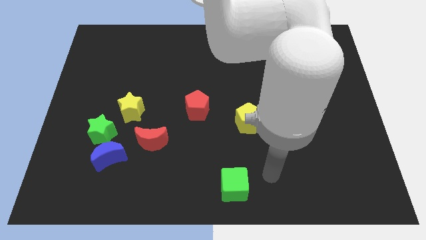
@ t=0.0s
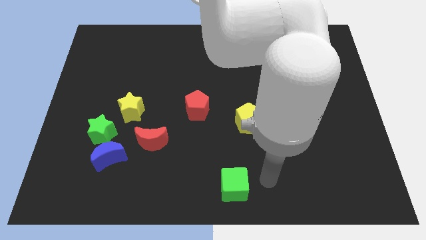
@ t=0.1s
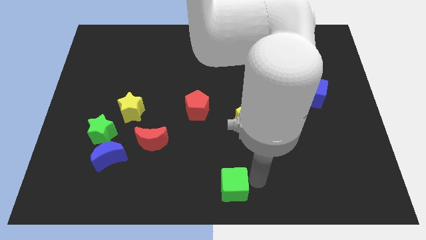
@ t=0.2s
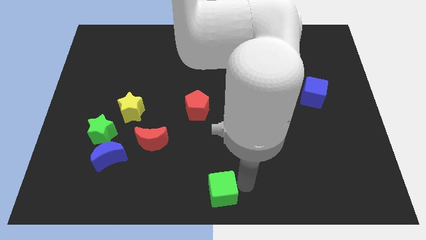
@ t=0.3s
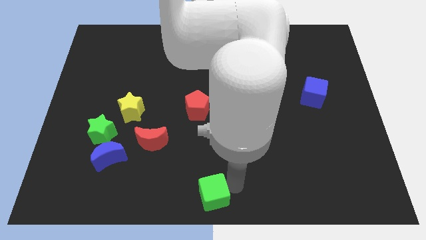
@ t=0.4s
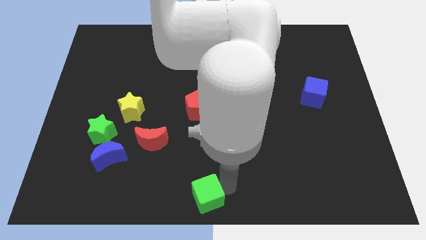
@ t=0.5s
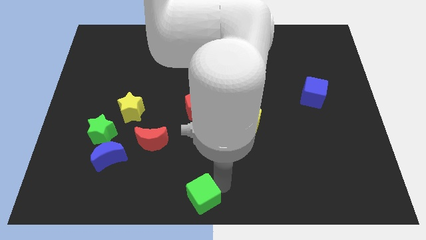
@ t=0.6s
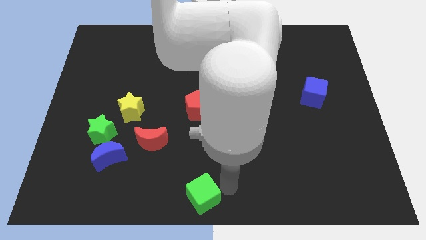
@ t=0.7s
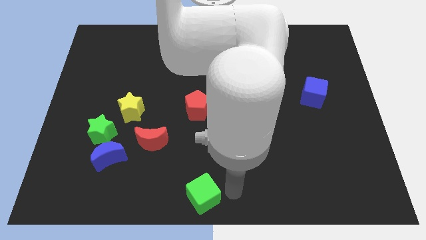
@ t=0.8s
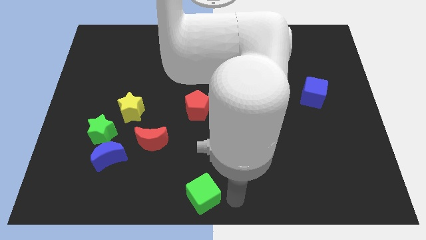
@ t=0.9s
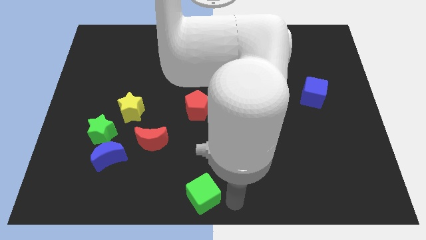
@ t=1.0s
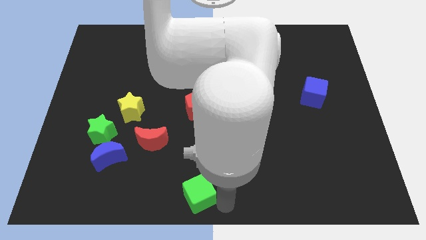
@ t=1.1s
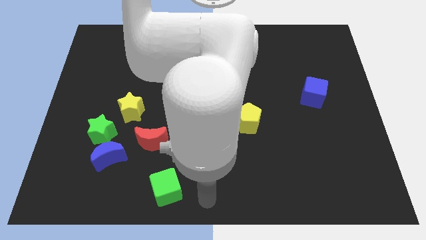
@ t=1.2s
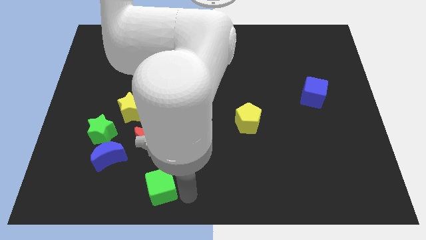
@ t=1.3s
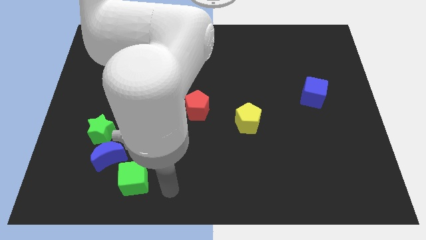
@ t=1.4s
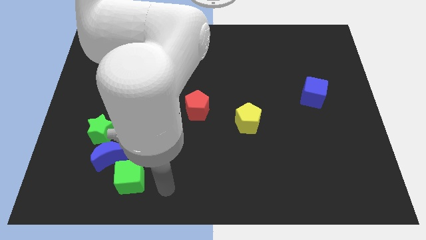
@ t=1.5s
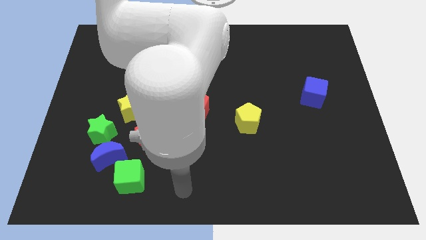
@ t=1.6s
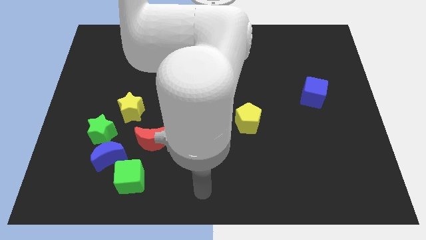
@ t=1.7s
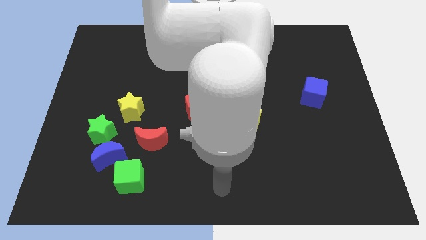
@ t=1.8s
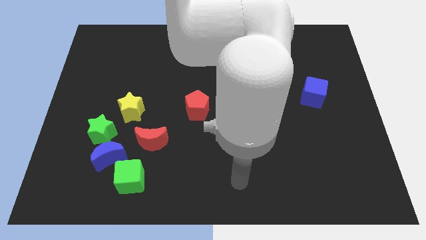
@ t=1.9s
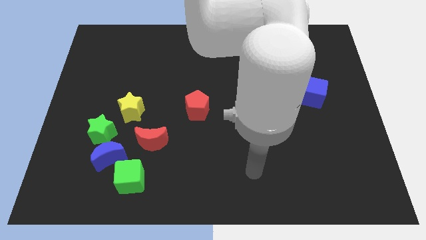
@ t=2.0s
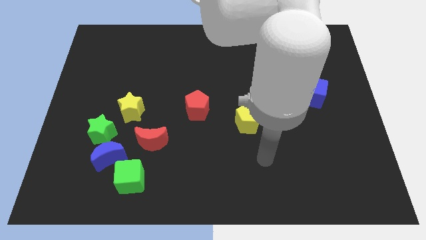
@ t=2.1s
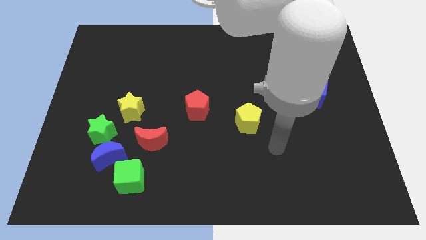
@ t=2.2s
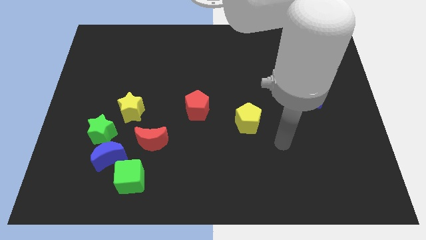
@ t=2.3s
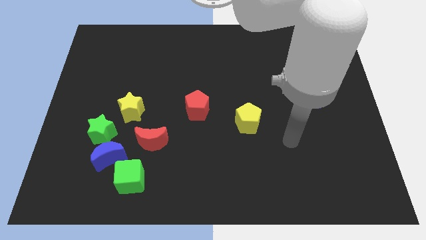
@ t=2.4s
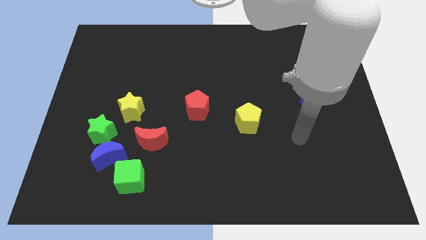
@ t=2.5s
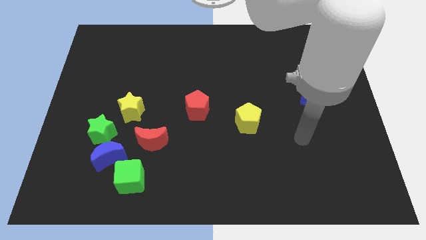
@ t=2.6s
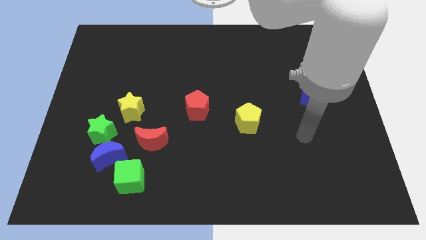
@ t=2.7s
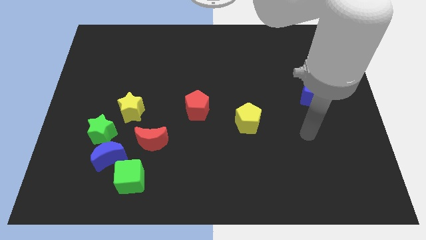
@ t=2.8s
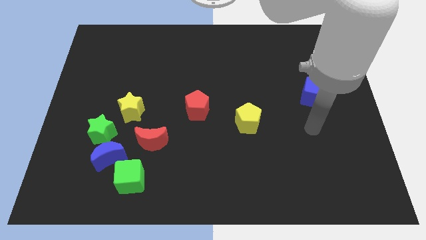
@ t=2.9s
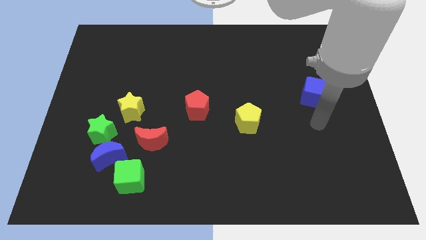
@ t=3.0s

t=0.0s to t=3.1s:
push the green cube to the bottom right side of the blue moon

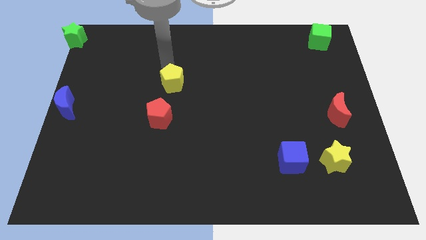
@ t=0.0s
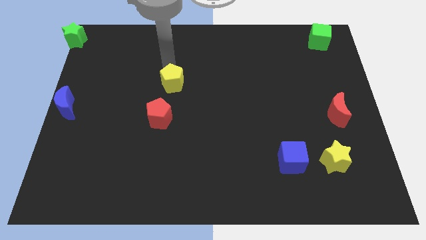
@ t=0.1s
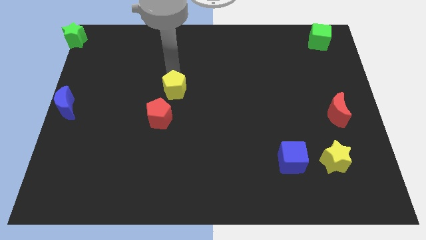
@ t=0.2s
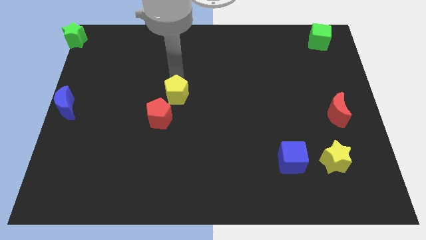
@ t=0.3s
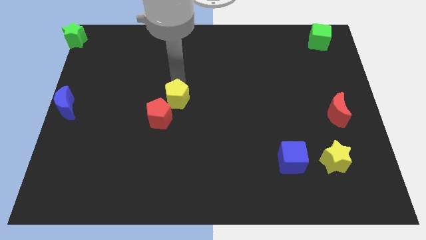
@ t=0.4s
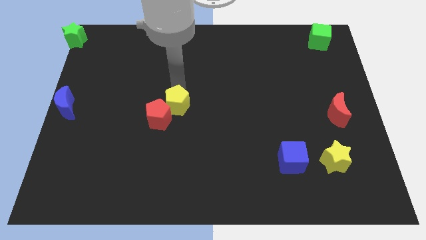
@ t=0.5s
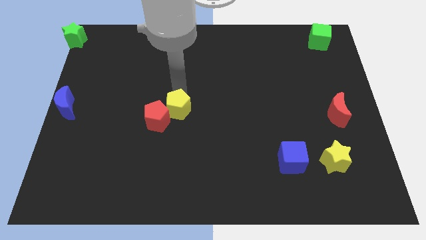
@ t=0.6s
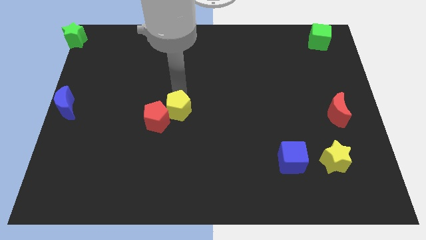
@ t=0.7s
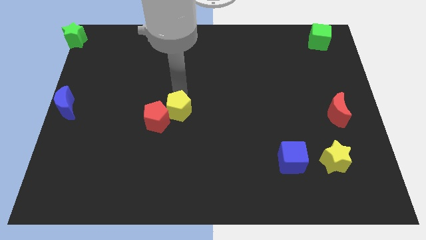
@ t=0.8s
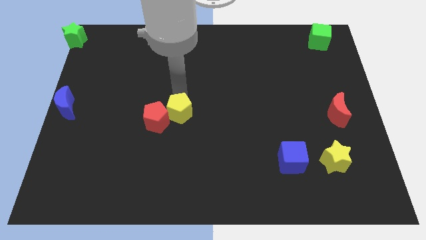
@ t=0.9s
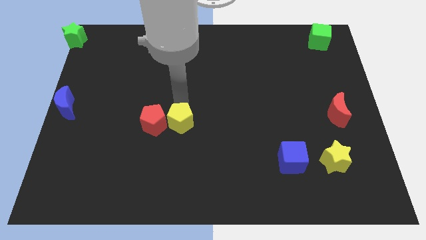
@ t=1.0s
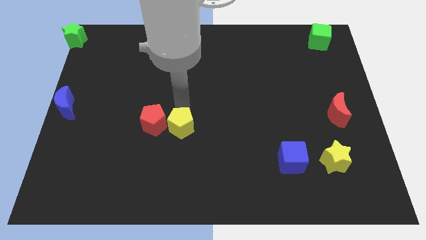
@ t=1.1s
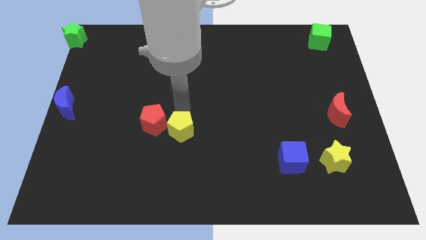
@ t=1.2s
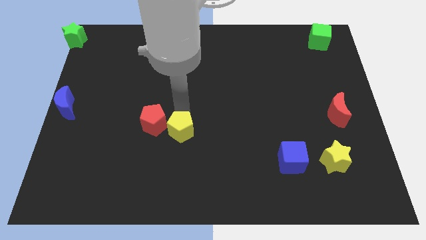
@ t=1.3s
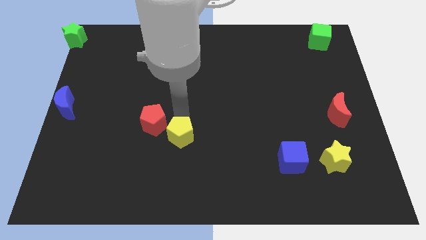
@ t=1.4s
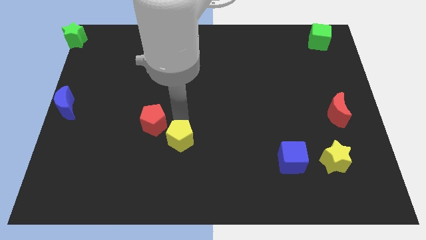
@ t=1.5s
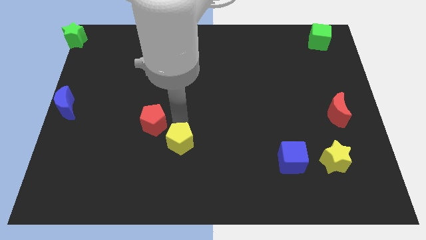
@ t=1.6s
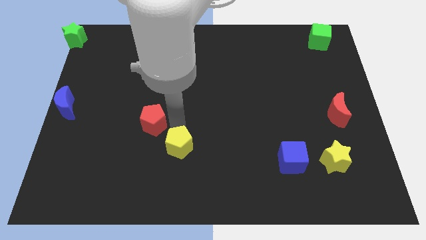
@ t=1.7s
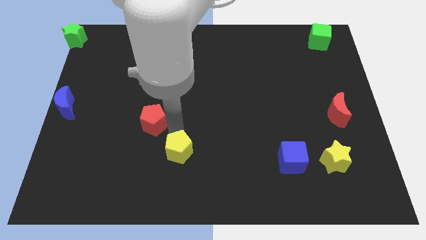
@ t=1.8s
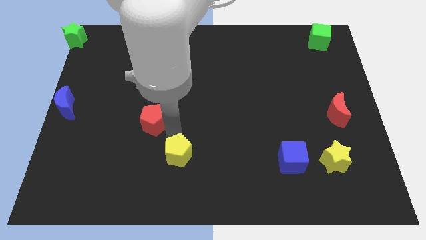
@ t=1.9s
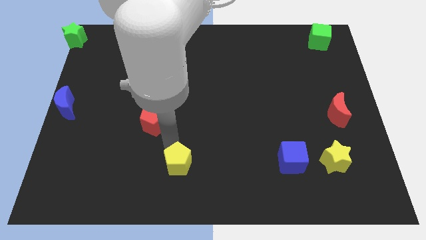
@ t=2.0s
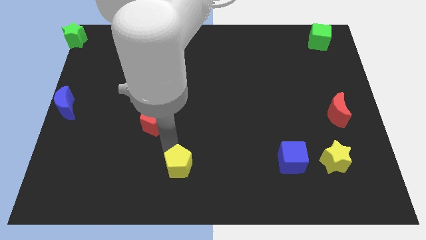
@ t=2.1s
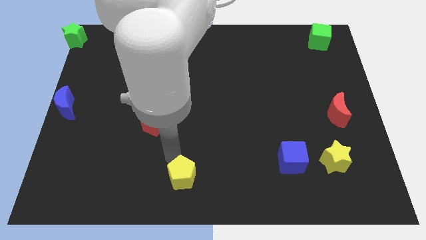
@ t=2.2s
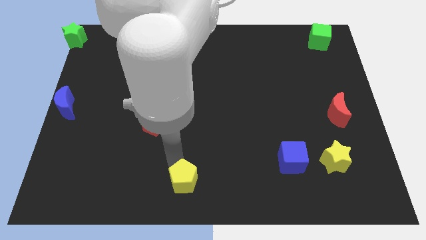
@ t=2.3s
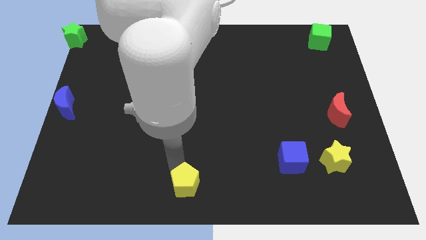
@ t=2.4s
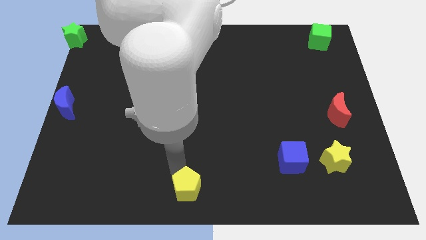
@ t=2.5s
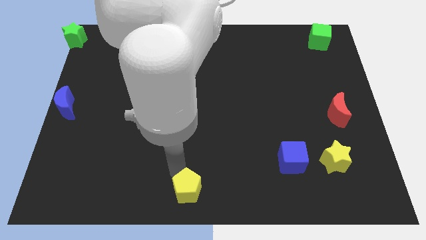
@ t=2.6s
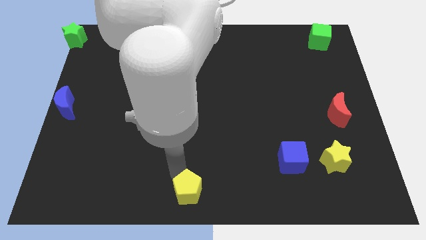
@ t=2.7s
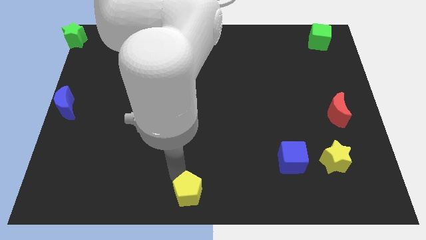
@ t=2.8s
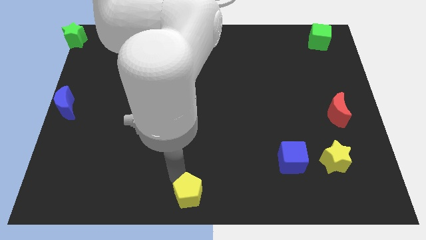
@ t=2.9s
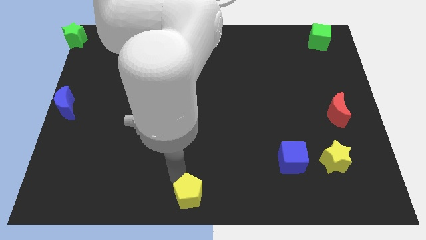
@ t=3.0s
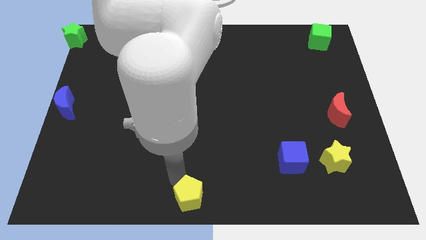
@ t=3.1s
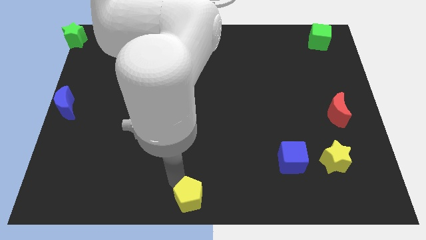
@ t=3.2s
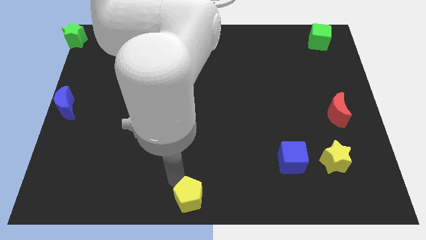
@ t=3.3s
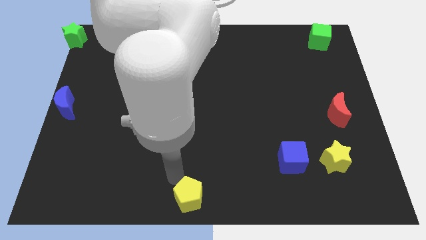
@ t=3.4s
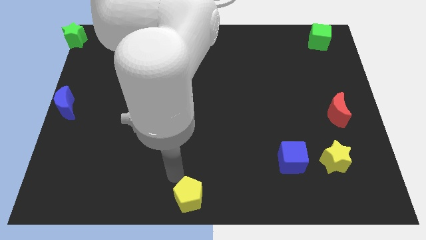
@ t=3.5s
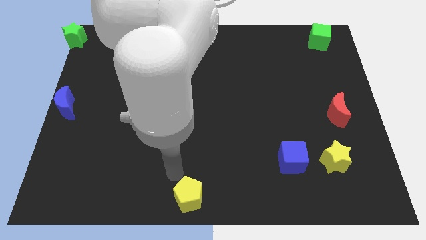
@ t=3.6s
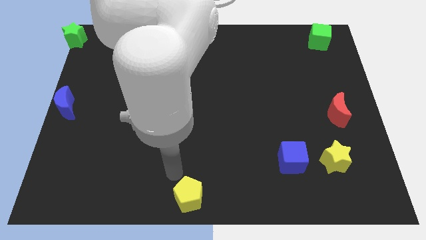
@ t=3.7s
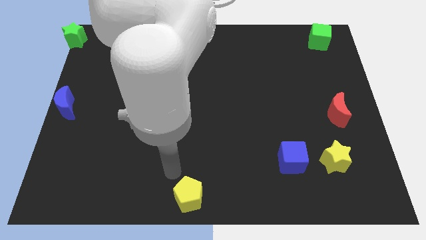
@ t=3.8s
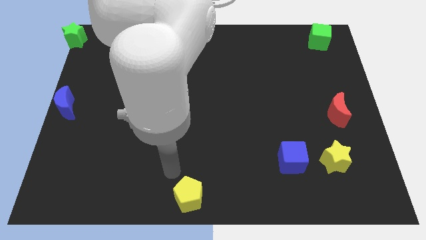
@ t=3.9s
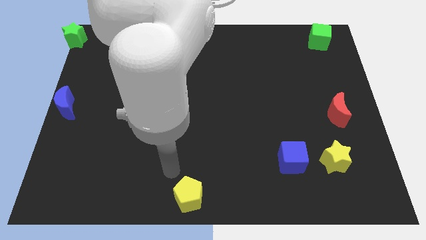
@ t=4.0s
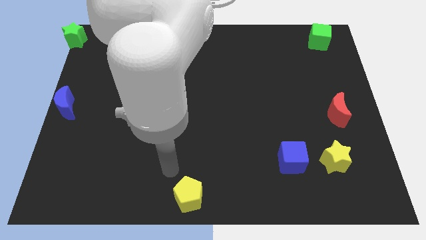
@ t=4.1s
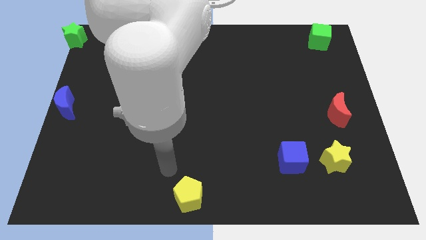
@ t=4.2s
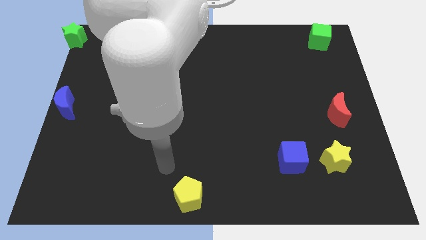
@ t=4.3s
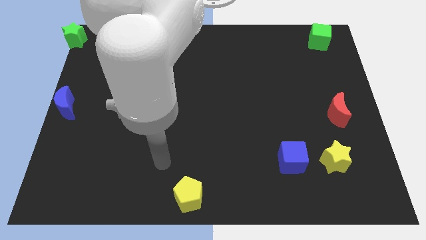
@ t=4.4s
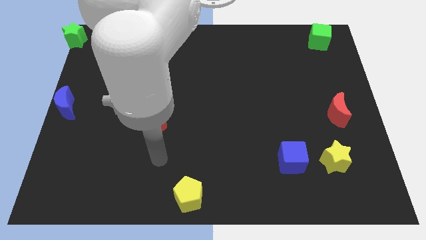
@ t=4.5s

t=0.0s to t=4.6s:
place the yellow pentagon to the bottom center of the board

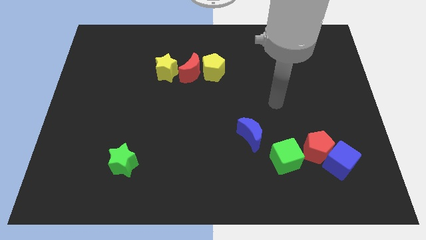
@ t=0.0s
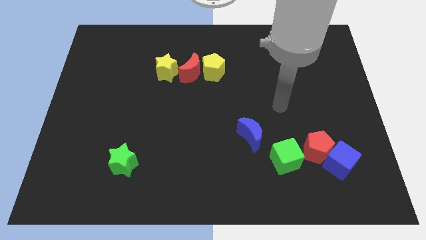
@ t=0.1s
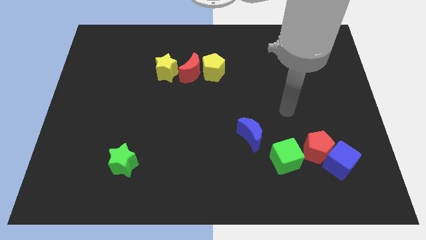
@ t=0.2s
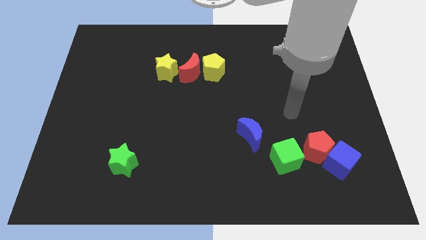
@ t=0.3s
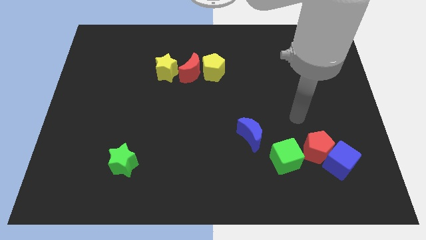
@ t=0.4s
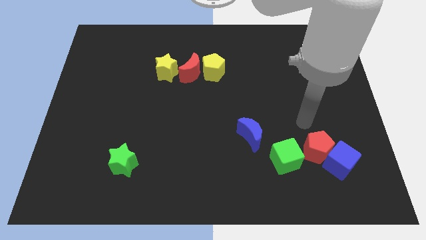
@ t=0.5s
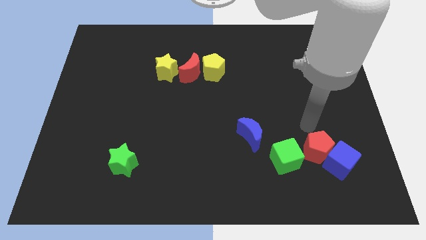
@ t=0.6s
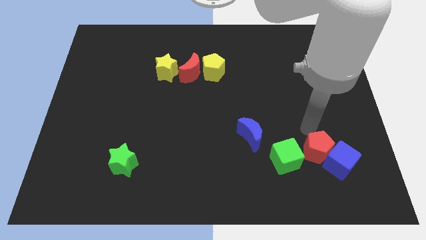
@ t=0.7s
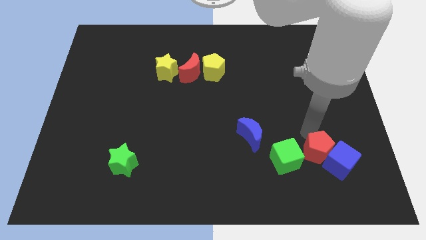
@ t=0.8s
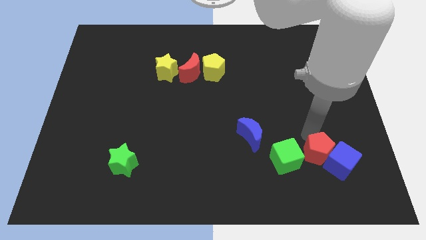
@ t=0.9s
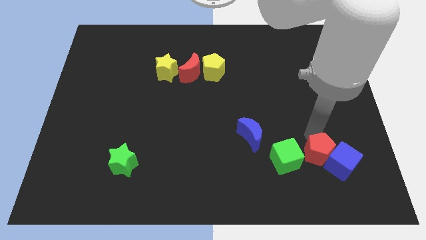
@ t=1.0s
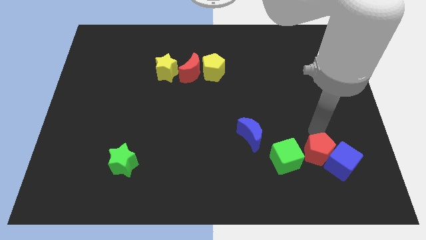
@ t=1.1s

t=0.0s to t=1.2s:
touch the red pentagon
